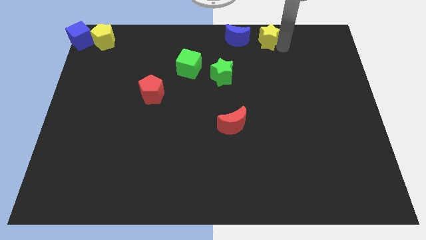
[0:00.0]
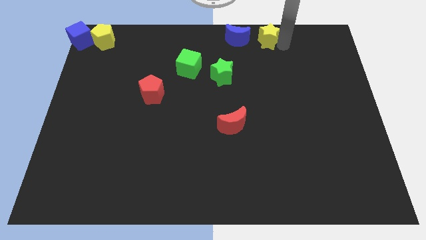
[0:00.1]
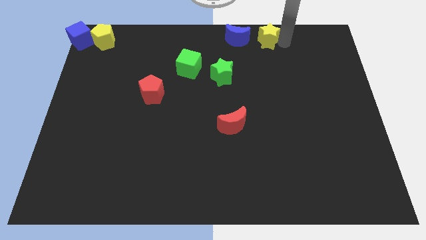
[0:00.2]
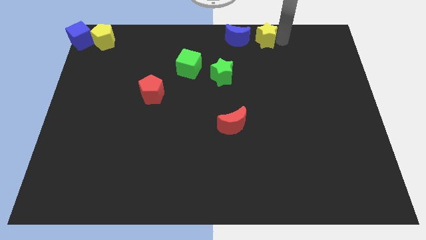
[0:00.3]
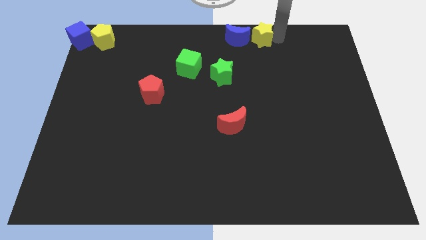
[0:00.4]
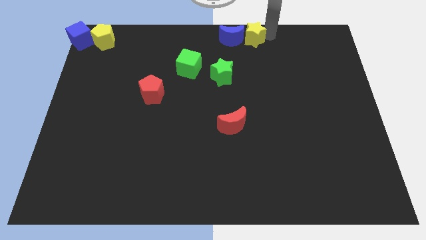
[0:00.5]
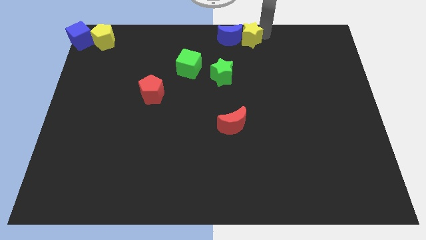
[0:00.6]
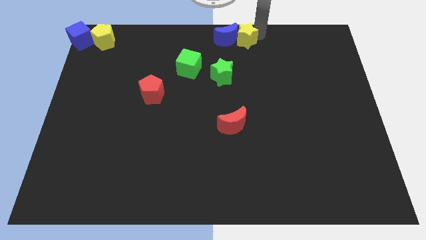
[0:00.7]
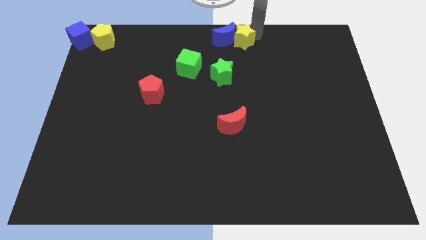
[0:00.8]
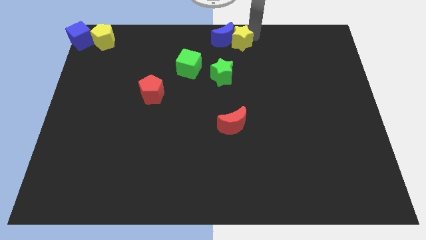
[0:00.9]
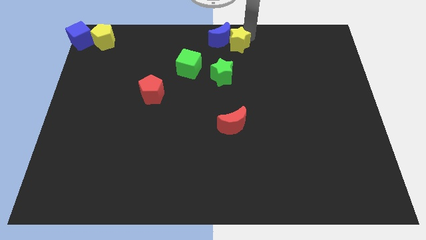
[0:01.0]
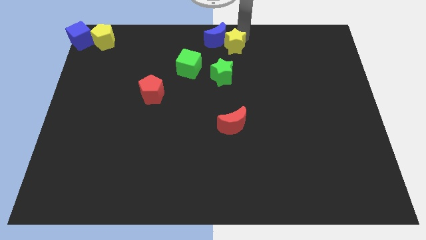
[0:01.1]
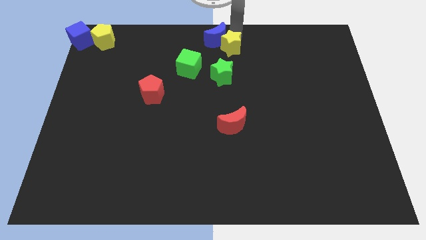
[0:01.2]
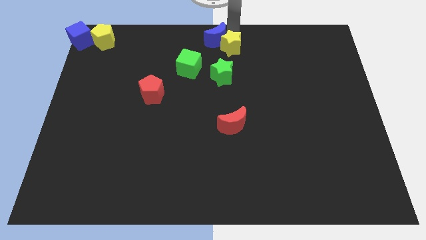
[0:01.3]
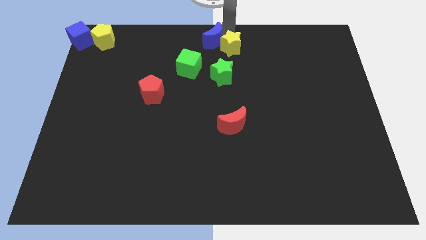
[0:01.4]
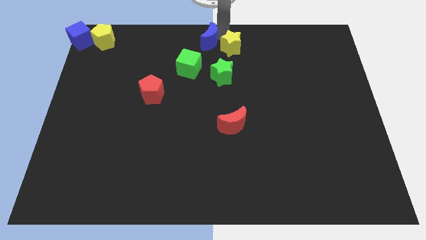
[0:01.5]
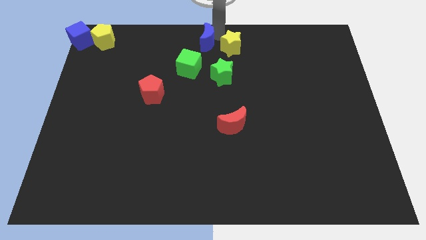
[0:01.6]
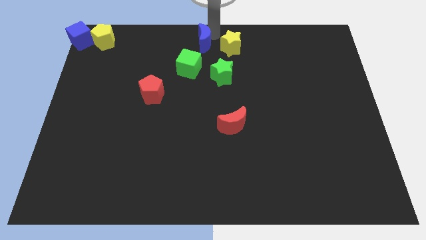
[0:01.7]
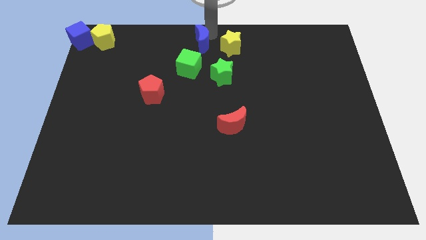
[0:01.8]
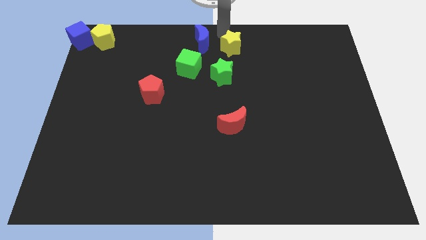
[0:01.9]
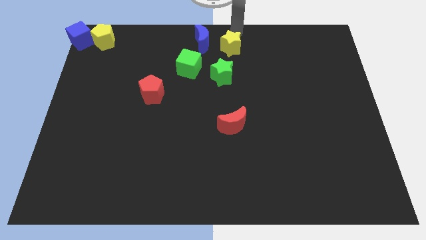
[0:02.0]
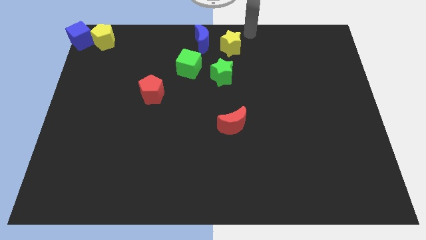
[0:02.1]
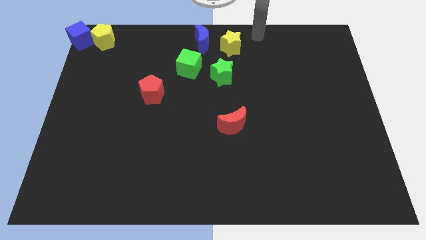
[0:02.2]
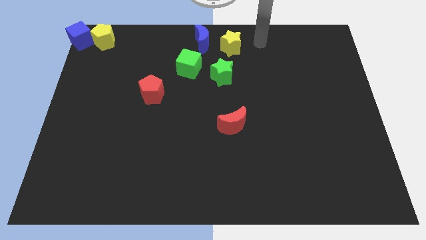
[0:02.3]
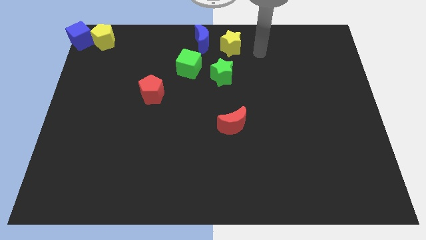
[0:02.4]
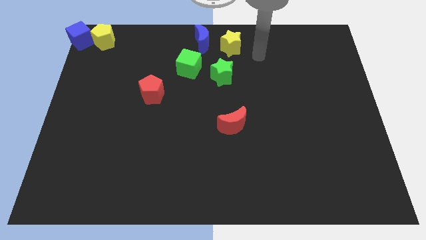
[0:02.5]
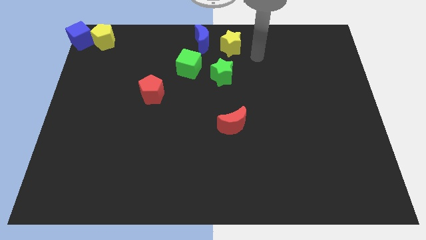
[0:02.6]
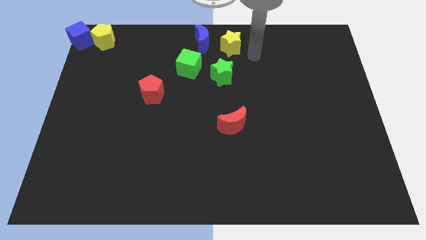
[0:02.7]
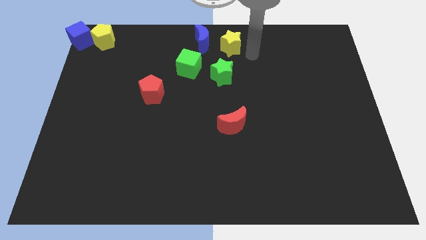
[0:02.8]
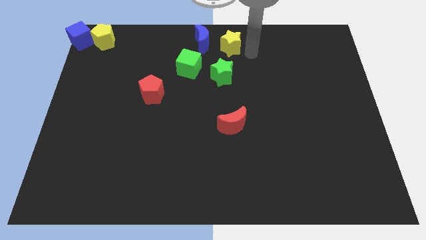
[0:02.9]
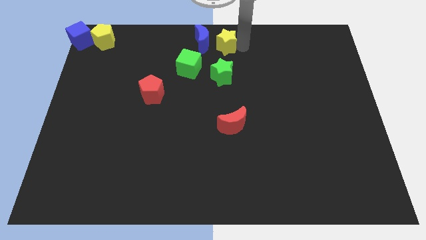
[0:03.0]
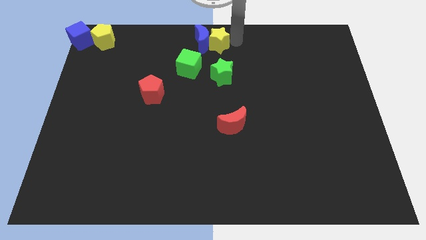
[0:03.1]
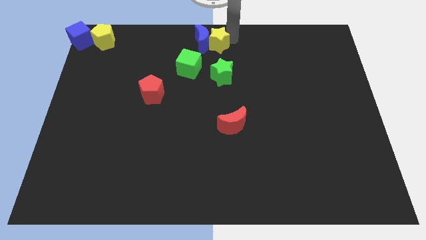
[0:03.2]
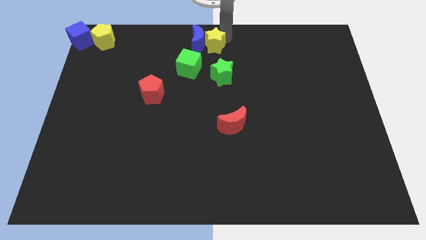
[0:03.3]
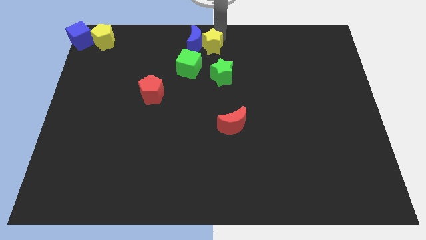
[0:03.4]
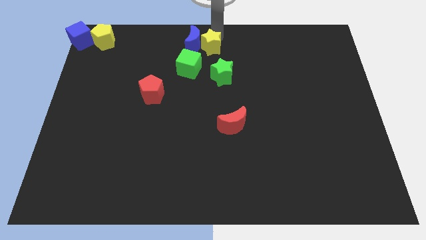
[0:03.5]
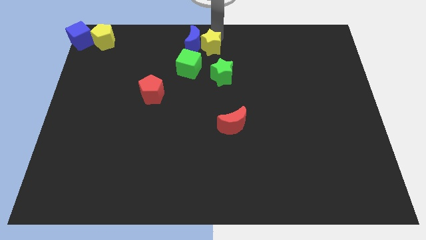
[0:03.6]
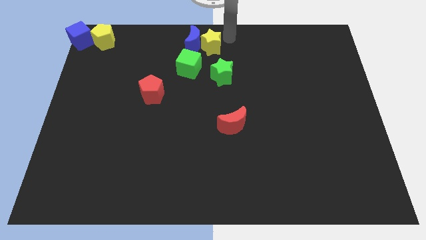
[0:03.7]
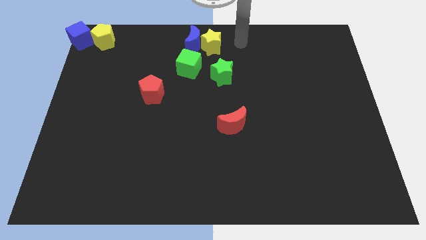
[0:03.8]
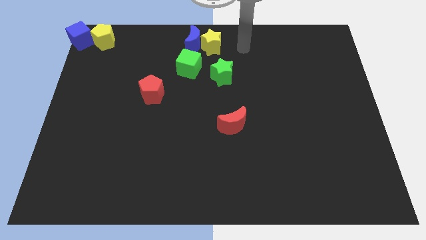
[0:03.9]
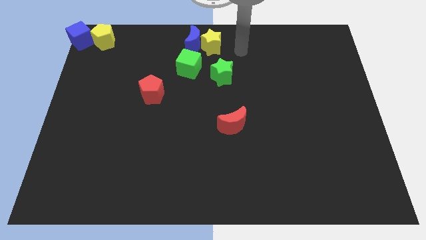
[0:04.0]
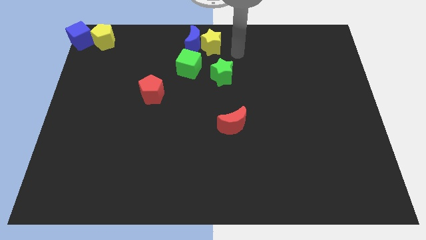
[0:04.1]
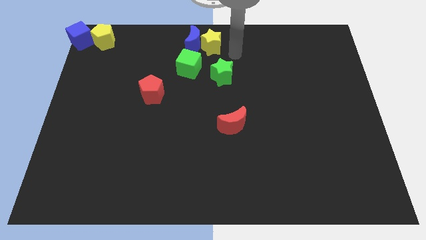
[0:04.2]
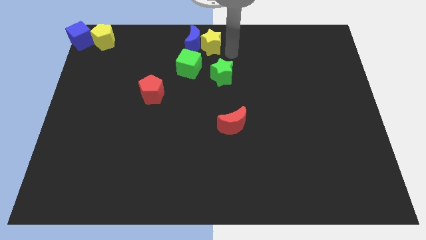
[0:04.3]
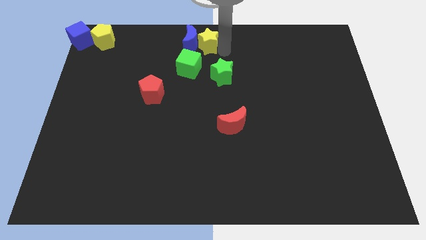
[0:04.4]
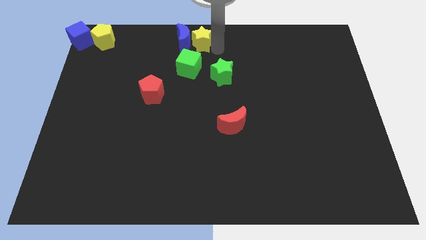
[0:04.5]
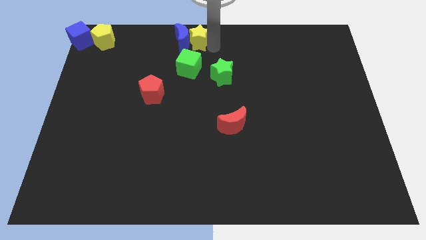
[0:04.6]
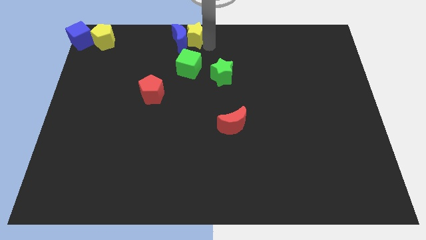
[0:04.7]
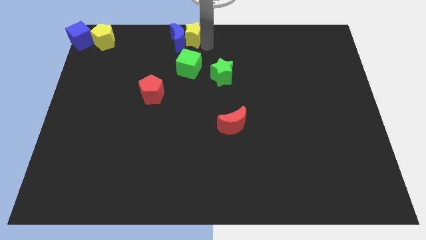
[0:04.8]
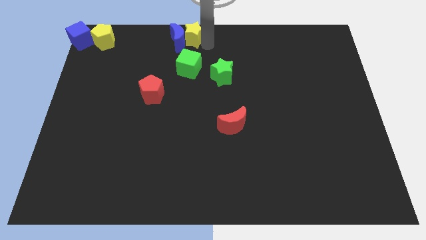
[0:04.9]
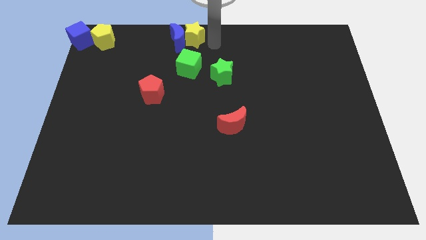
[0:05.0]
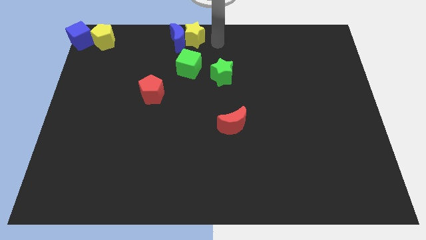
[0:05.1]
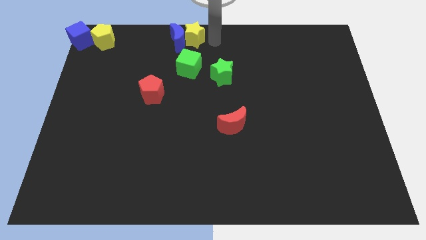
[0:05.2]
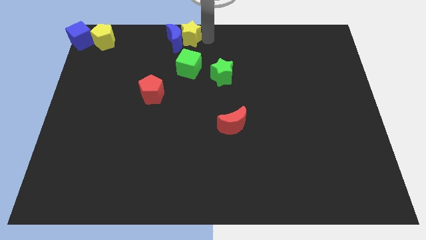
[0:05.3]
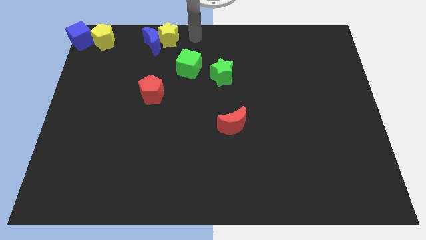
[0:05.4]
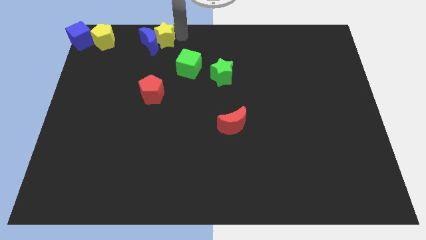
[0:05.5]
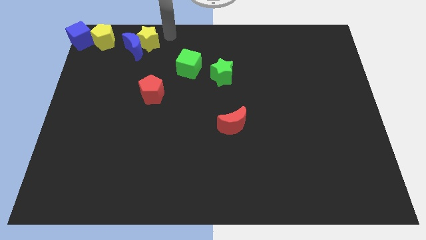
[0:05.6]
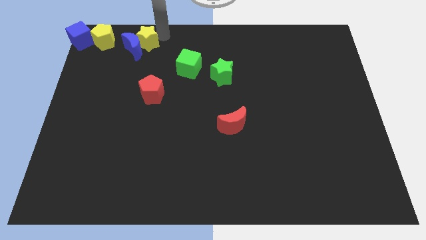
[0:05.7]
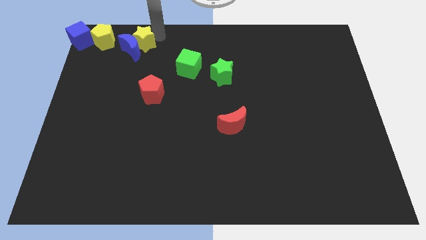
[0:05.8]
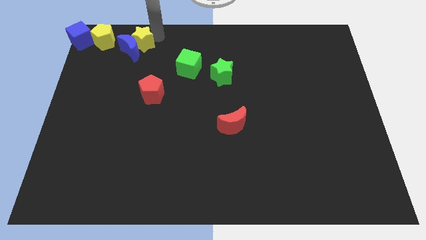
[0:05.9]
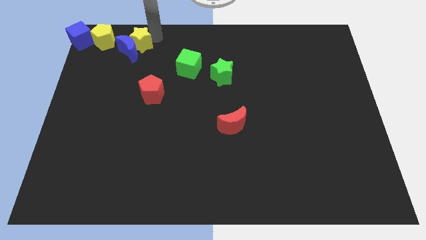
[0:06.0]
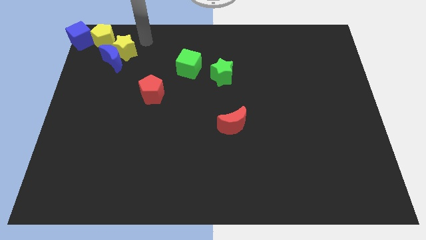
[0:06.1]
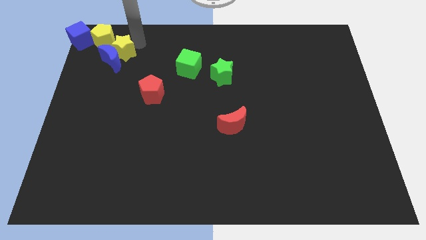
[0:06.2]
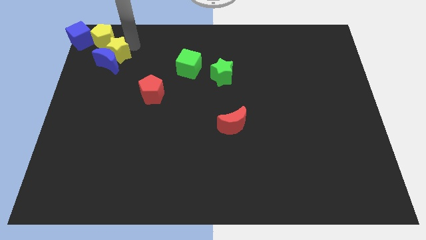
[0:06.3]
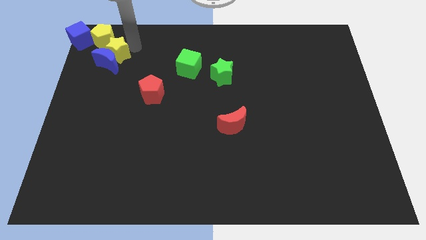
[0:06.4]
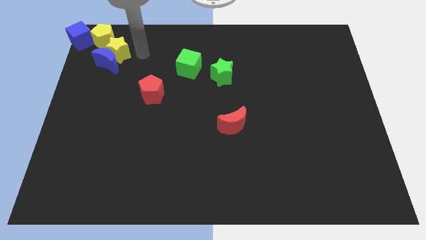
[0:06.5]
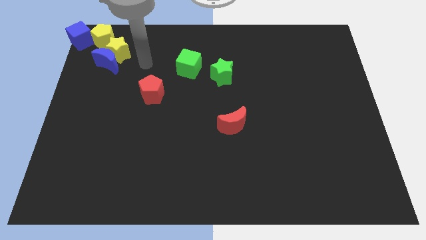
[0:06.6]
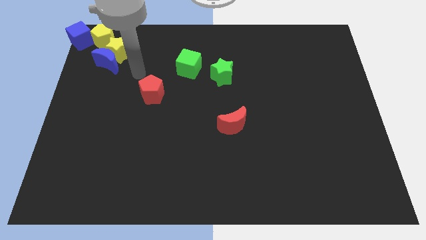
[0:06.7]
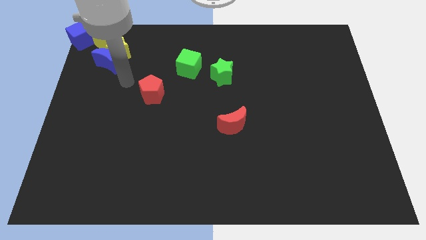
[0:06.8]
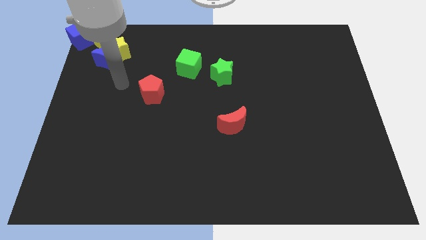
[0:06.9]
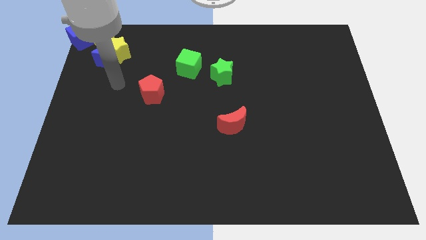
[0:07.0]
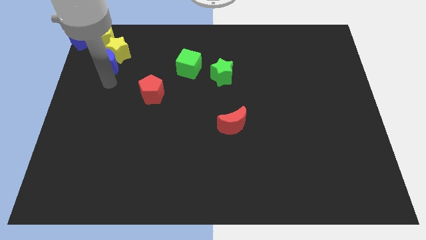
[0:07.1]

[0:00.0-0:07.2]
push the blue moon and yellow star towards the top left corner of the board

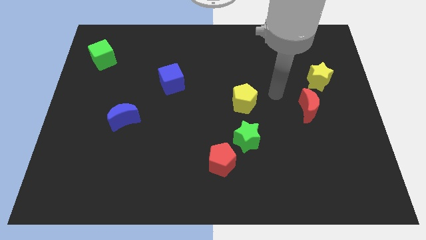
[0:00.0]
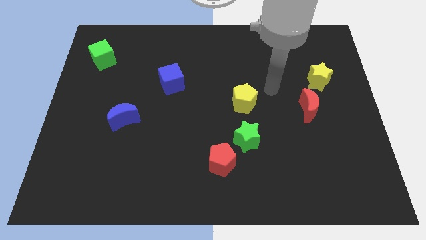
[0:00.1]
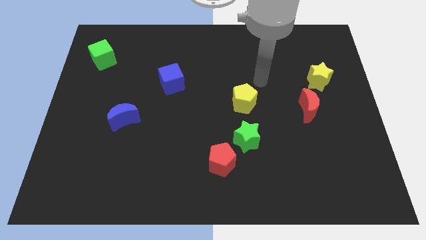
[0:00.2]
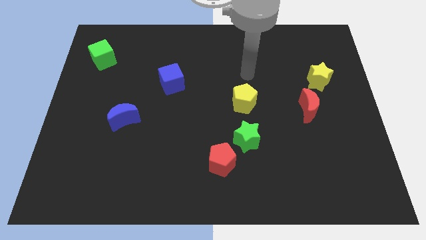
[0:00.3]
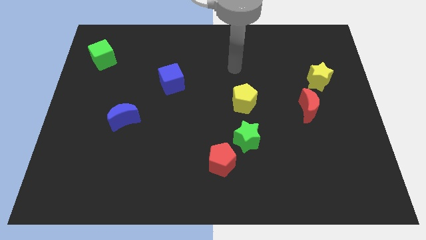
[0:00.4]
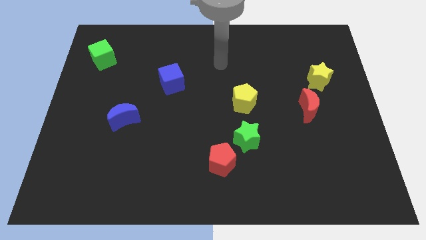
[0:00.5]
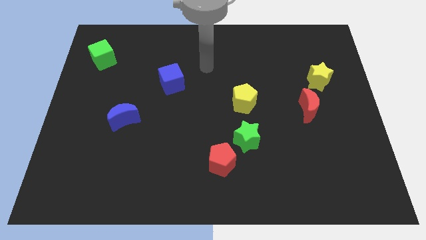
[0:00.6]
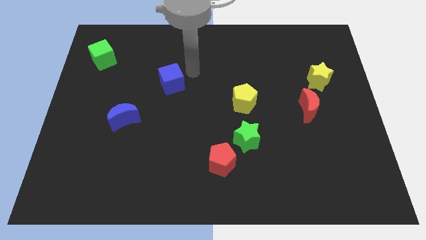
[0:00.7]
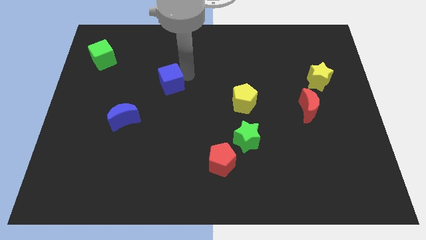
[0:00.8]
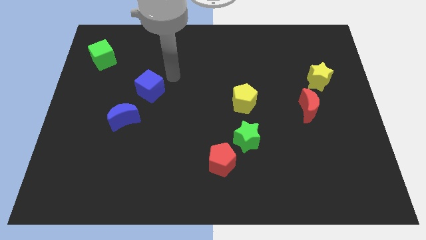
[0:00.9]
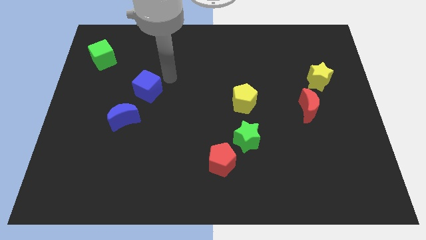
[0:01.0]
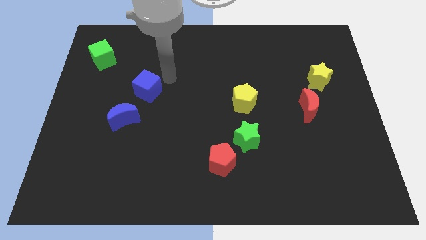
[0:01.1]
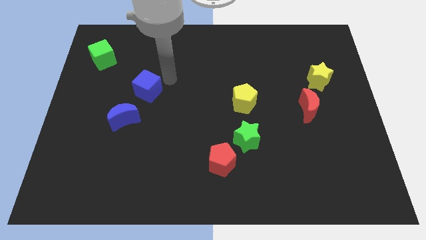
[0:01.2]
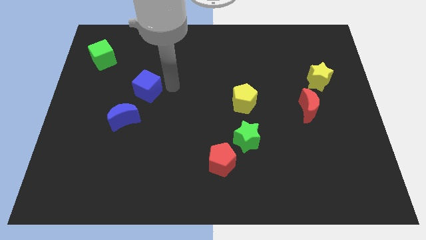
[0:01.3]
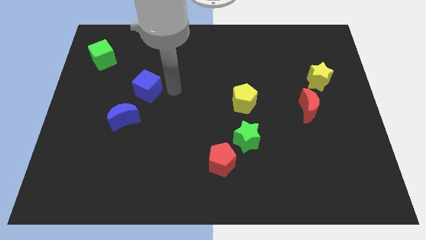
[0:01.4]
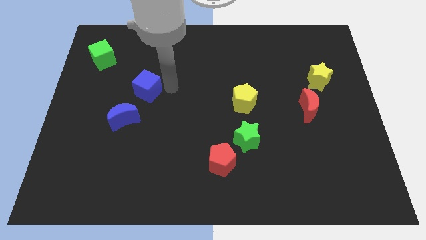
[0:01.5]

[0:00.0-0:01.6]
push the blue cube to the top right of the blue crescent

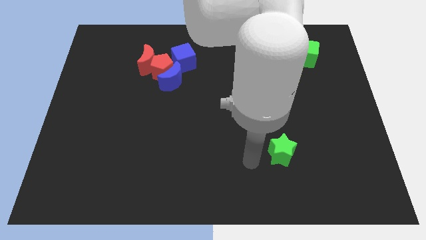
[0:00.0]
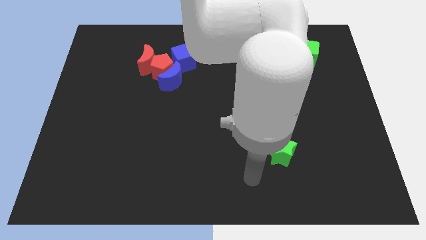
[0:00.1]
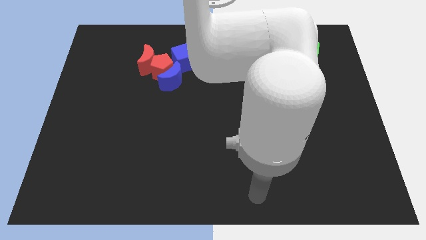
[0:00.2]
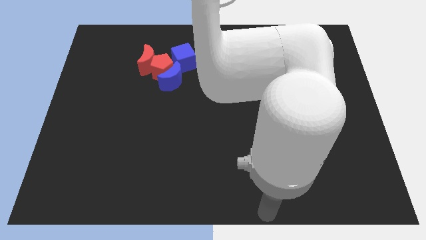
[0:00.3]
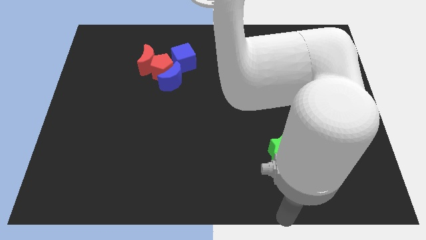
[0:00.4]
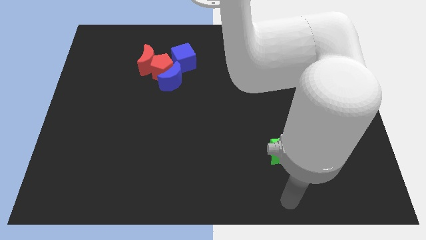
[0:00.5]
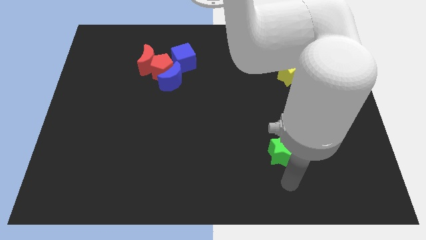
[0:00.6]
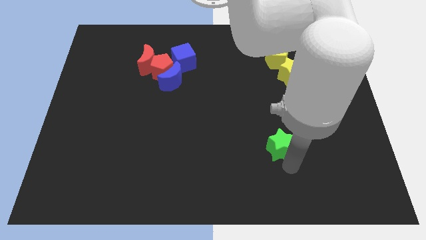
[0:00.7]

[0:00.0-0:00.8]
point the arm below the green star
